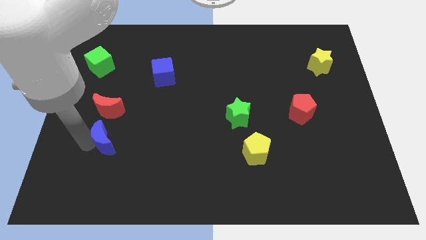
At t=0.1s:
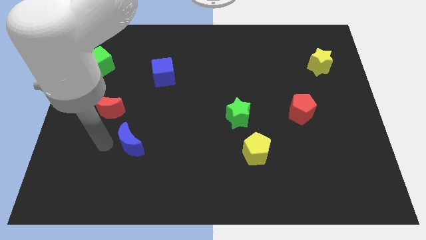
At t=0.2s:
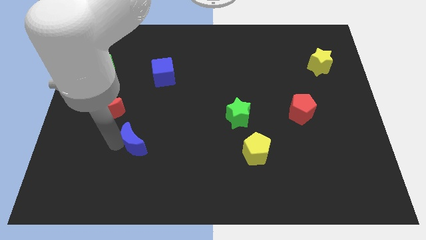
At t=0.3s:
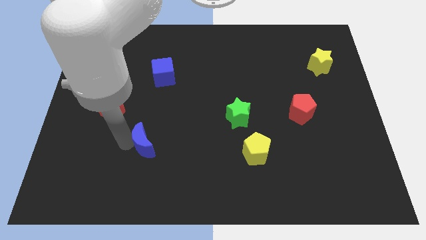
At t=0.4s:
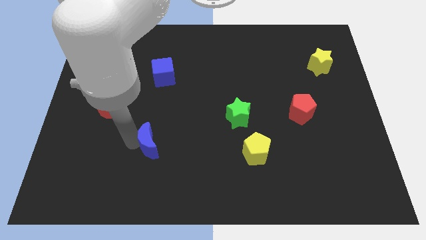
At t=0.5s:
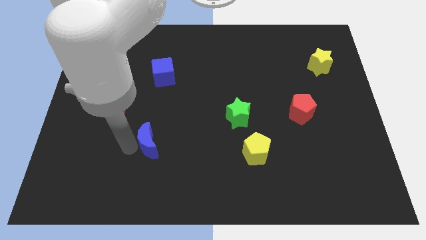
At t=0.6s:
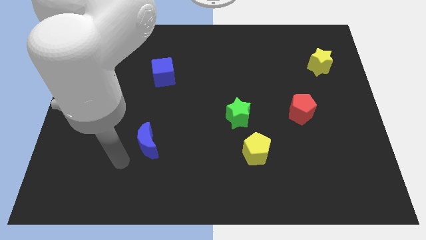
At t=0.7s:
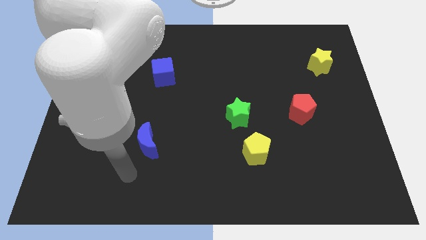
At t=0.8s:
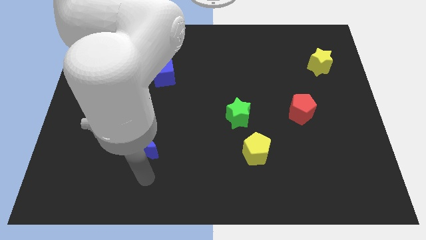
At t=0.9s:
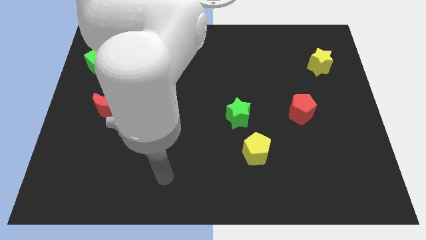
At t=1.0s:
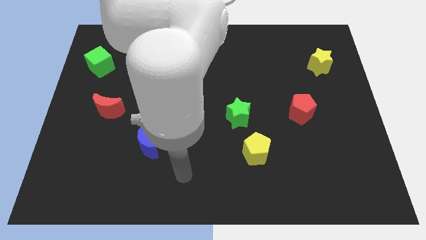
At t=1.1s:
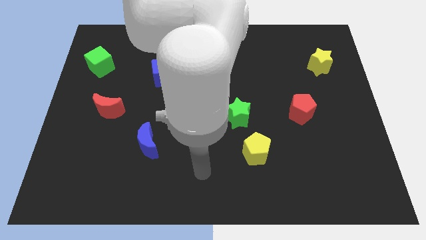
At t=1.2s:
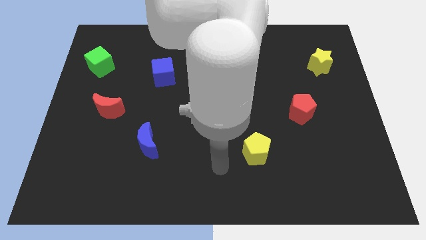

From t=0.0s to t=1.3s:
move the blue moon diagonally on the bottom right side of the red moon

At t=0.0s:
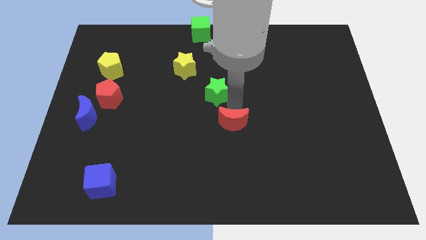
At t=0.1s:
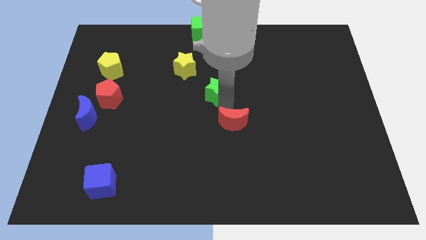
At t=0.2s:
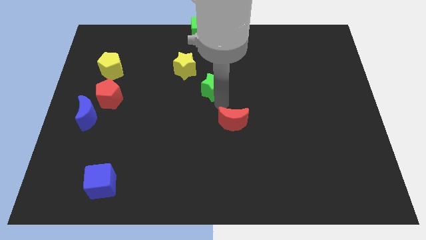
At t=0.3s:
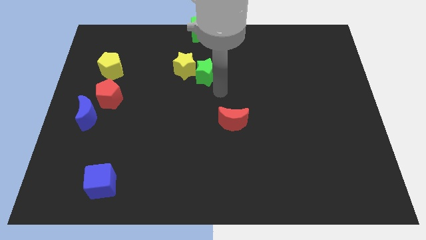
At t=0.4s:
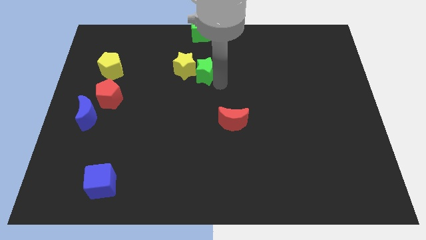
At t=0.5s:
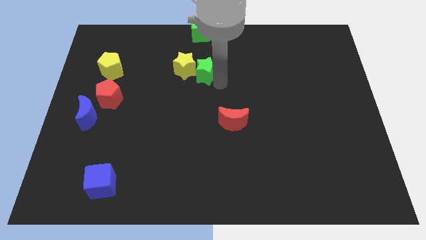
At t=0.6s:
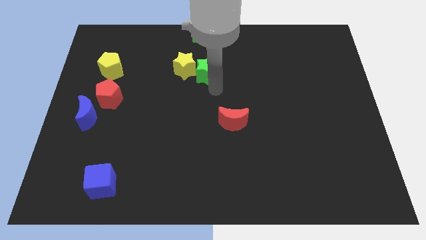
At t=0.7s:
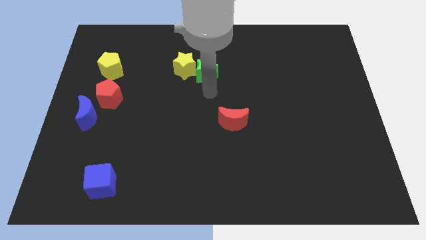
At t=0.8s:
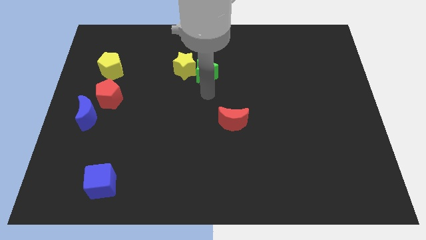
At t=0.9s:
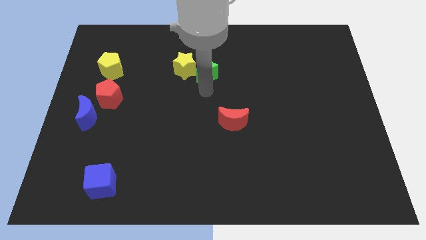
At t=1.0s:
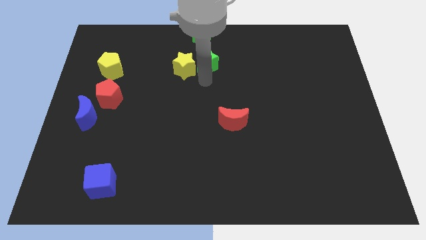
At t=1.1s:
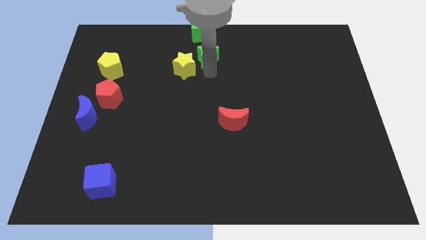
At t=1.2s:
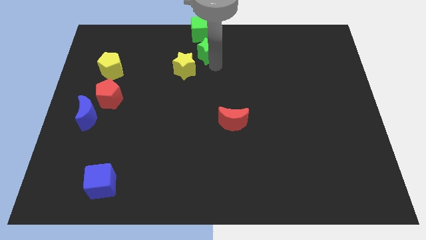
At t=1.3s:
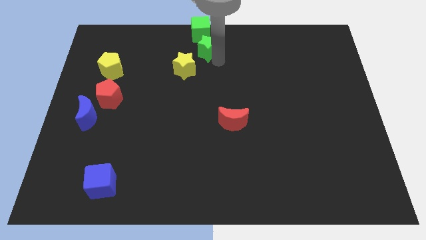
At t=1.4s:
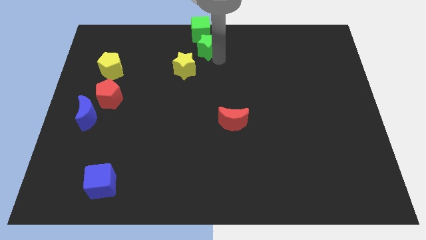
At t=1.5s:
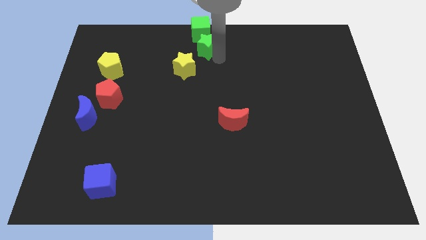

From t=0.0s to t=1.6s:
push the green star under green cube

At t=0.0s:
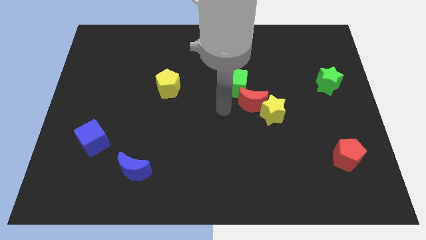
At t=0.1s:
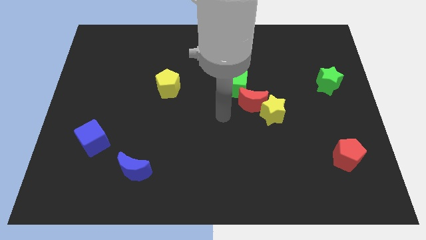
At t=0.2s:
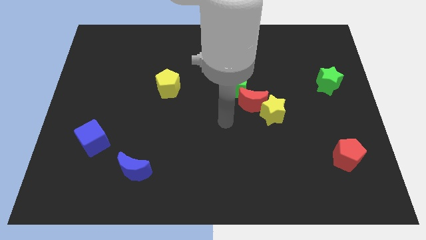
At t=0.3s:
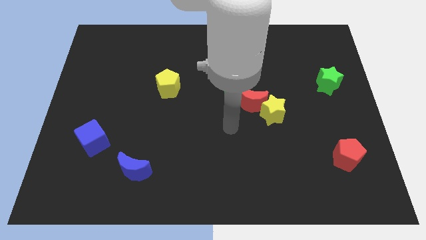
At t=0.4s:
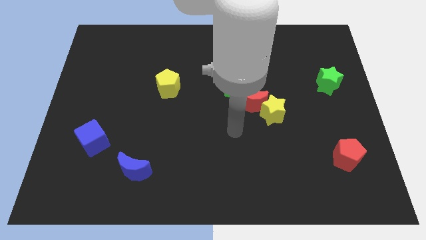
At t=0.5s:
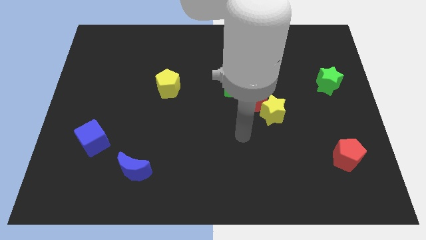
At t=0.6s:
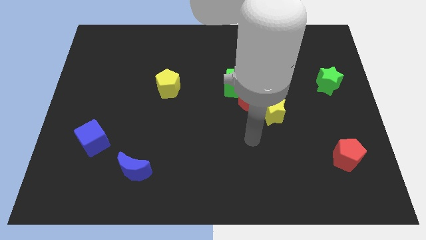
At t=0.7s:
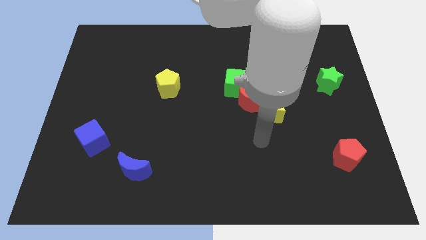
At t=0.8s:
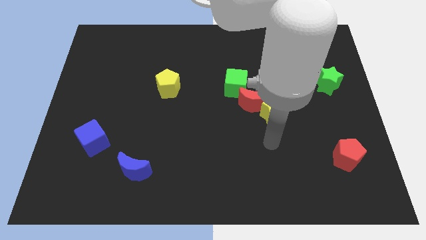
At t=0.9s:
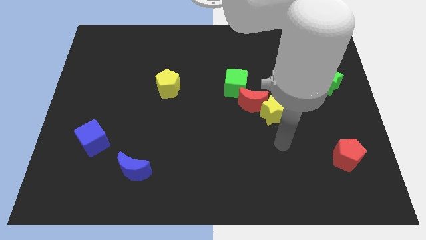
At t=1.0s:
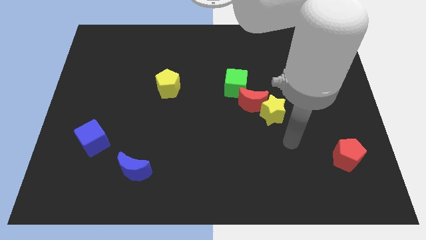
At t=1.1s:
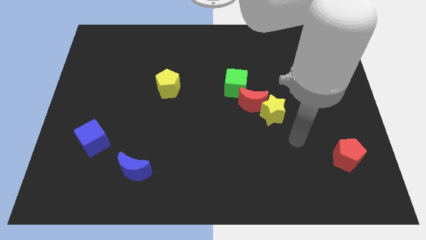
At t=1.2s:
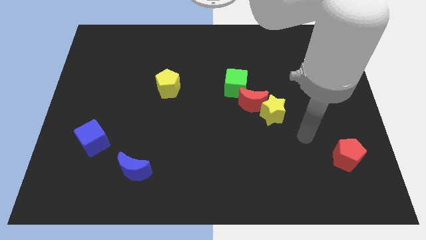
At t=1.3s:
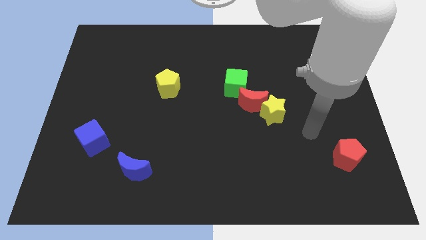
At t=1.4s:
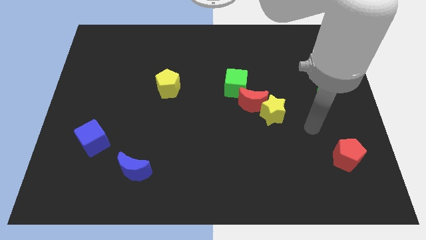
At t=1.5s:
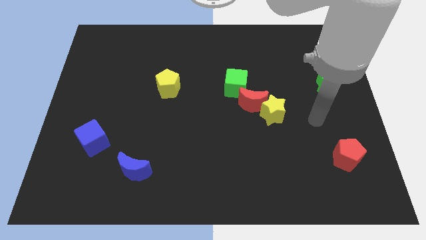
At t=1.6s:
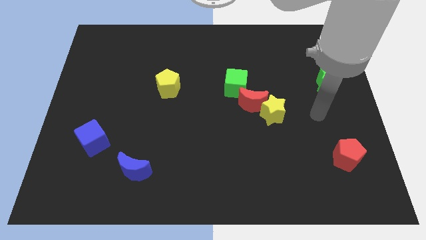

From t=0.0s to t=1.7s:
move your arm to the right of the yellow star

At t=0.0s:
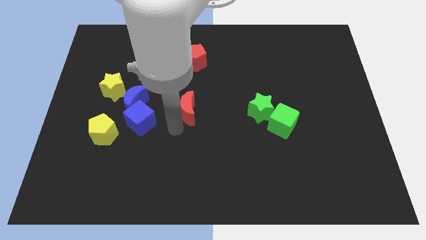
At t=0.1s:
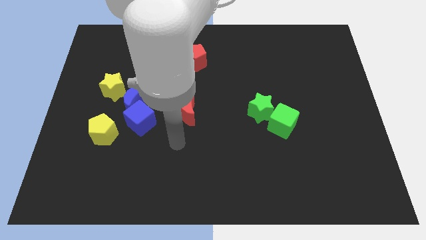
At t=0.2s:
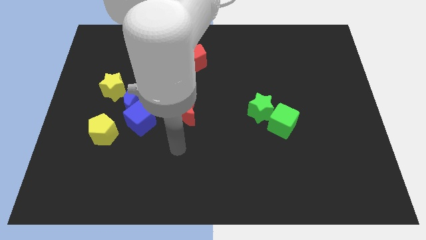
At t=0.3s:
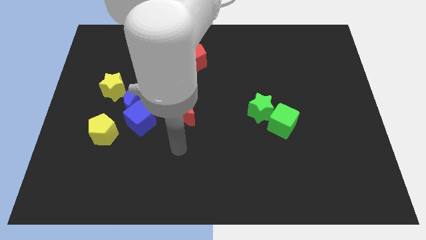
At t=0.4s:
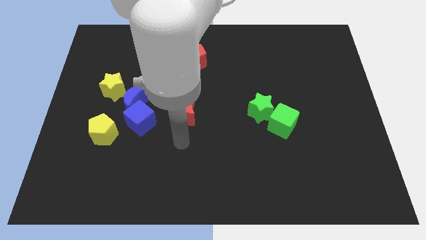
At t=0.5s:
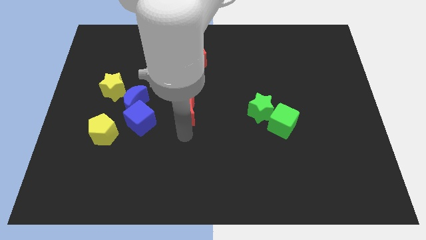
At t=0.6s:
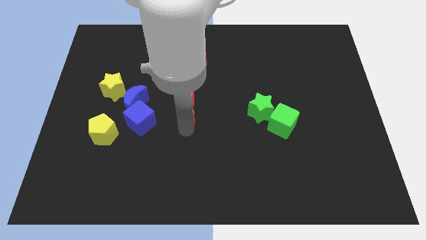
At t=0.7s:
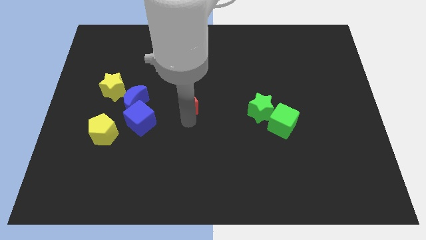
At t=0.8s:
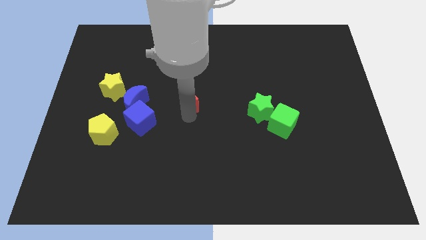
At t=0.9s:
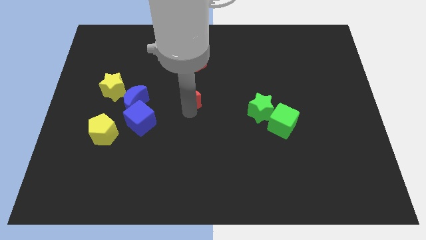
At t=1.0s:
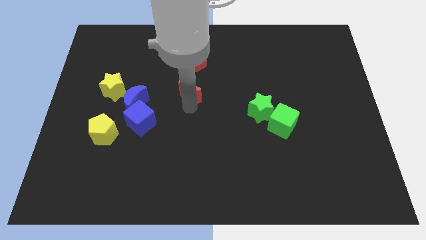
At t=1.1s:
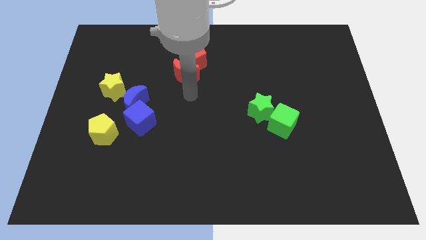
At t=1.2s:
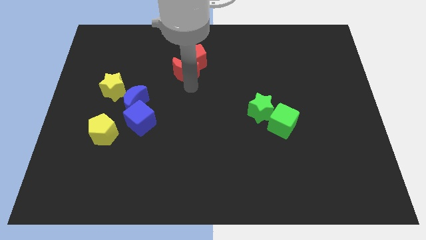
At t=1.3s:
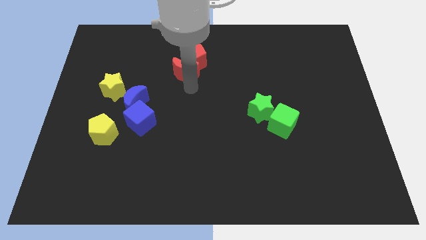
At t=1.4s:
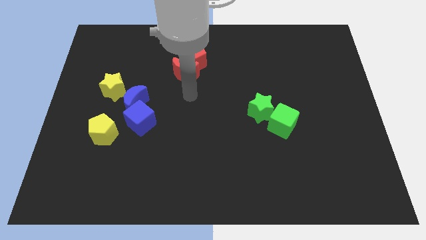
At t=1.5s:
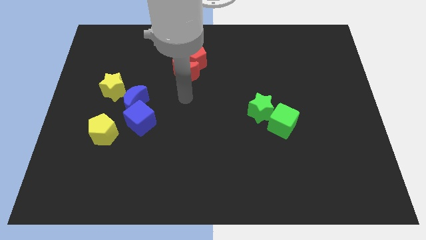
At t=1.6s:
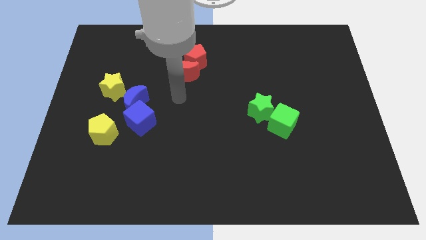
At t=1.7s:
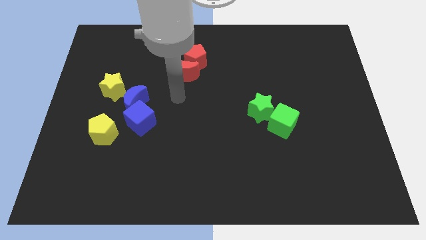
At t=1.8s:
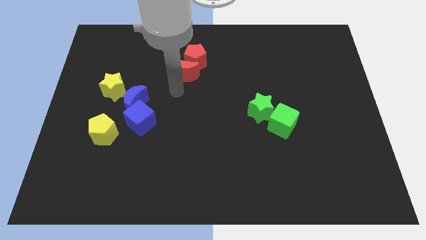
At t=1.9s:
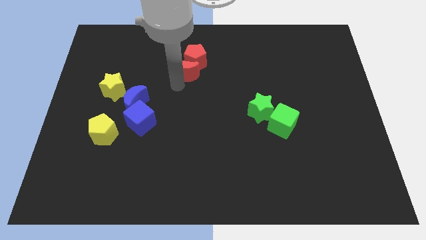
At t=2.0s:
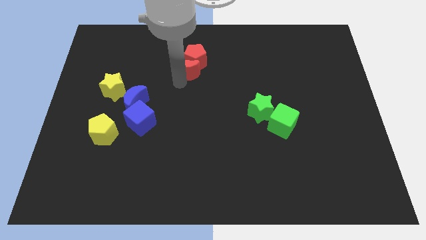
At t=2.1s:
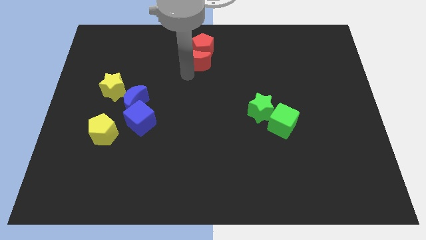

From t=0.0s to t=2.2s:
push red moon into red pentagon

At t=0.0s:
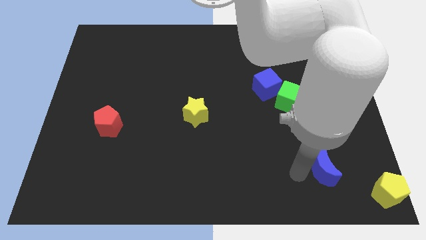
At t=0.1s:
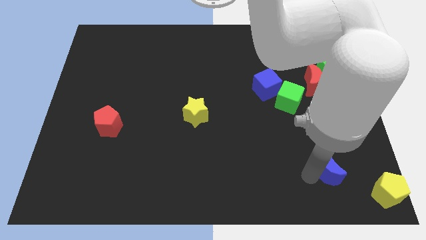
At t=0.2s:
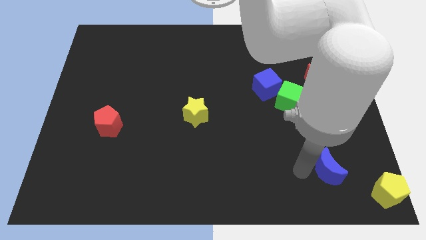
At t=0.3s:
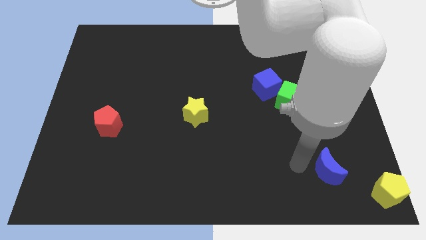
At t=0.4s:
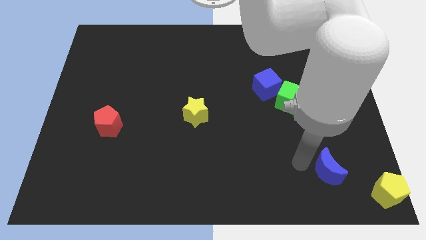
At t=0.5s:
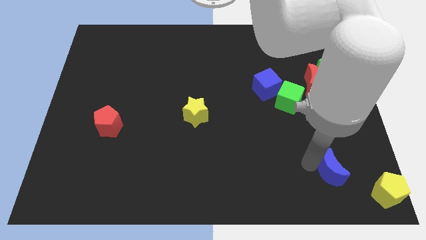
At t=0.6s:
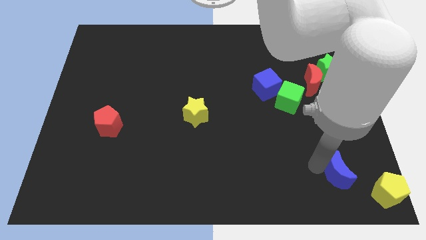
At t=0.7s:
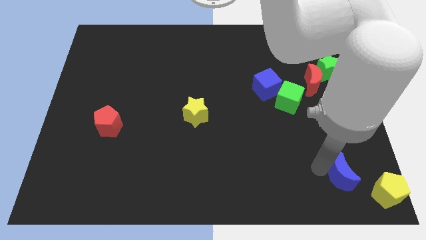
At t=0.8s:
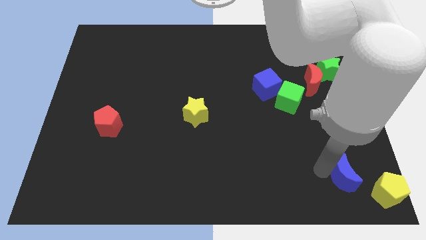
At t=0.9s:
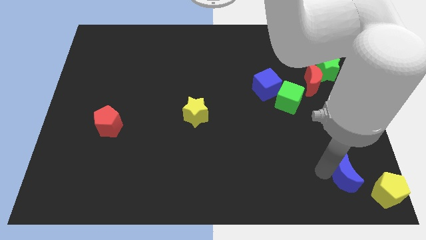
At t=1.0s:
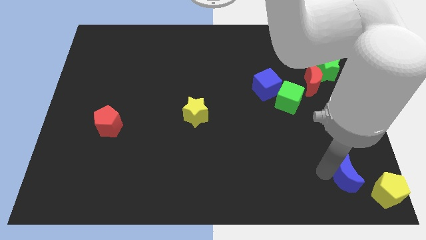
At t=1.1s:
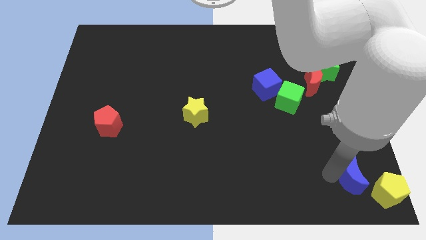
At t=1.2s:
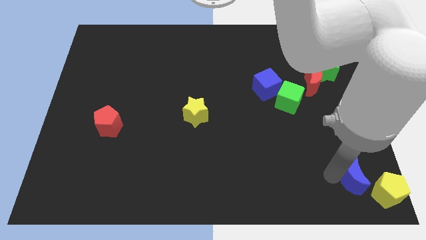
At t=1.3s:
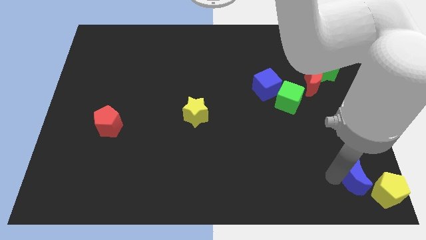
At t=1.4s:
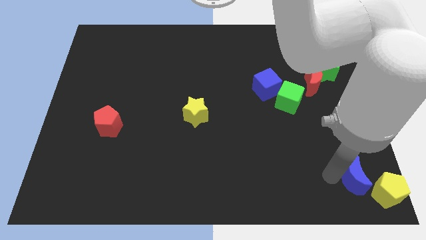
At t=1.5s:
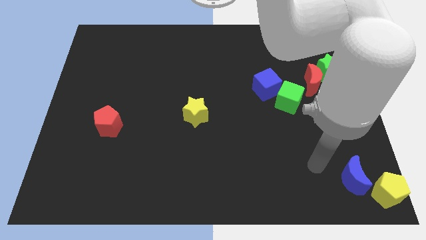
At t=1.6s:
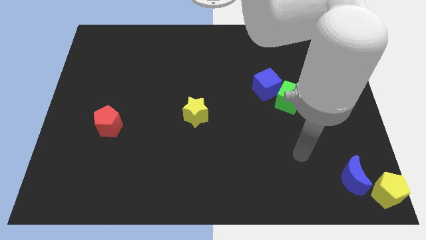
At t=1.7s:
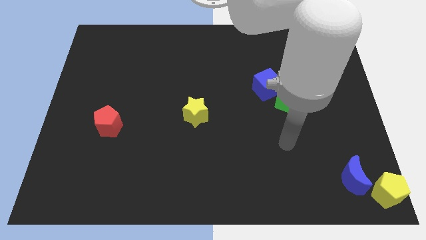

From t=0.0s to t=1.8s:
place the blue crescent at the leftside of the yellow pentagon

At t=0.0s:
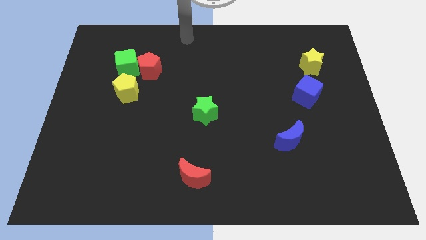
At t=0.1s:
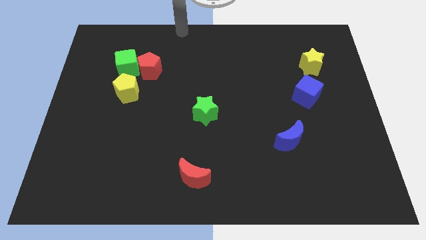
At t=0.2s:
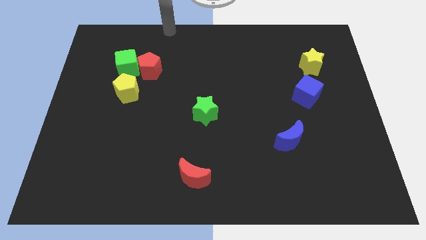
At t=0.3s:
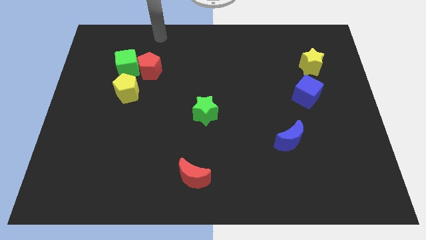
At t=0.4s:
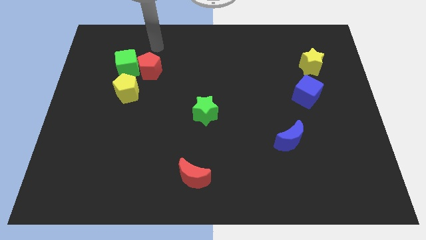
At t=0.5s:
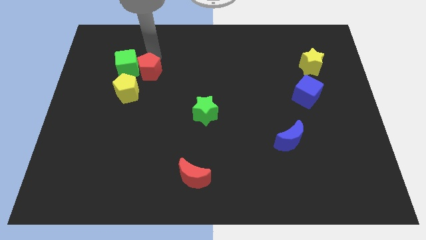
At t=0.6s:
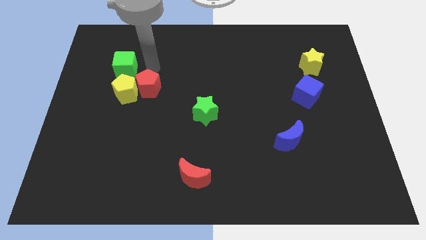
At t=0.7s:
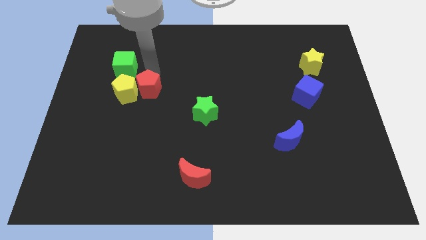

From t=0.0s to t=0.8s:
push red pentagon beside yellow pentagon
